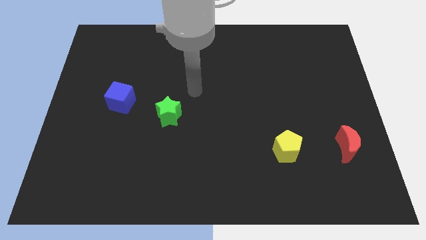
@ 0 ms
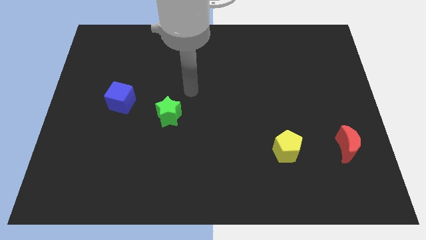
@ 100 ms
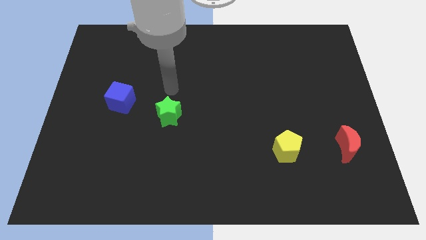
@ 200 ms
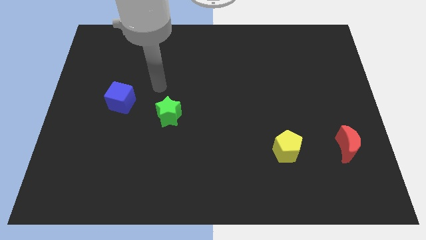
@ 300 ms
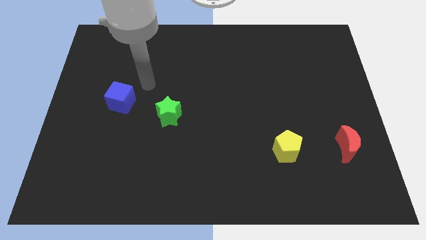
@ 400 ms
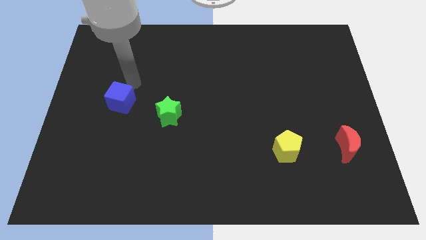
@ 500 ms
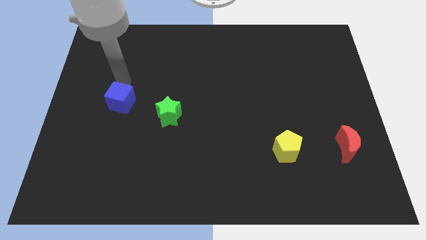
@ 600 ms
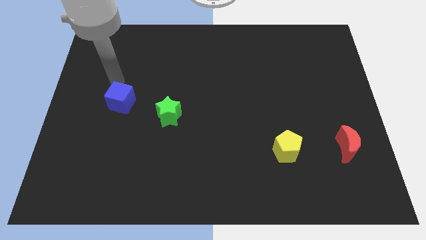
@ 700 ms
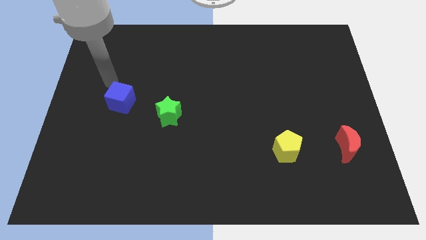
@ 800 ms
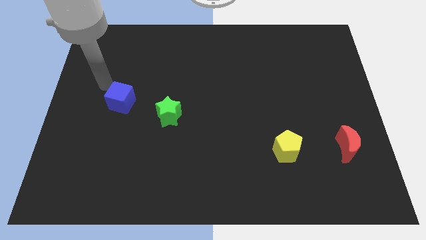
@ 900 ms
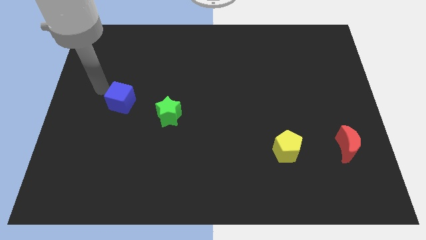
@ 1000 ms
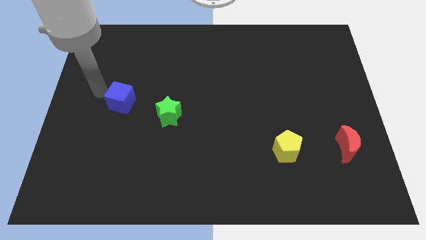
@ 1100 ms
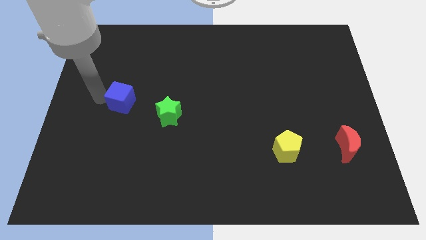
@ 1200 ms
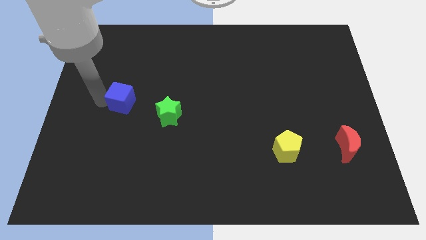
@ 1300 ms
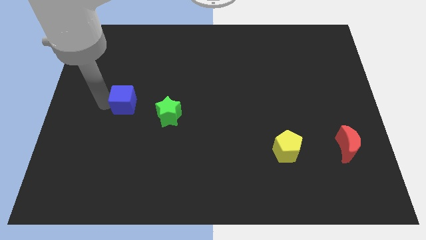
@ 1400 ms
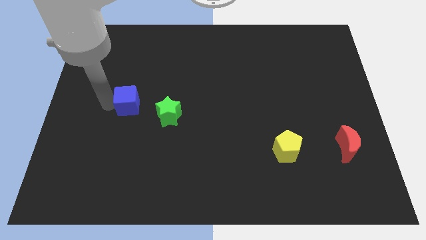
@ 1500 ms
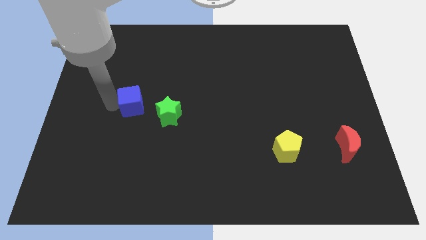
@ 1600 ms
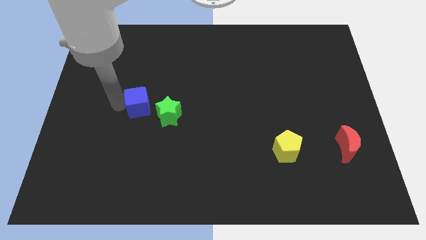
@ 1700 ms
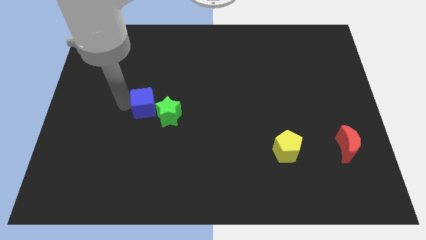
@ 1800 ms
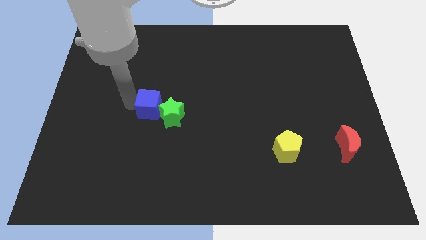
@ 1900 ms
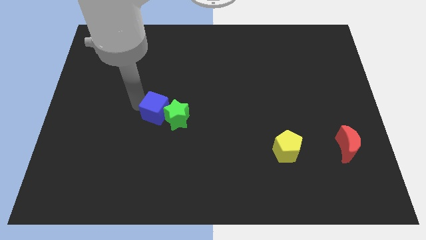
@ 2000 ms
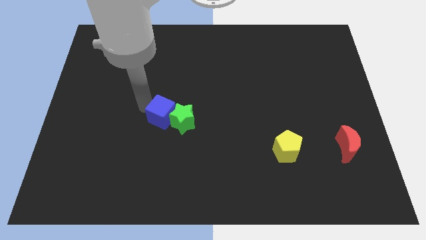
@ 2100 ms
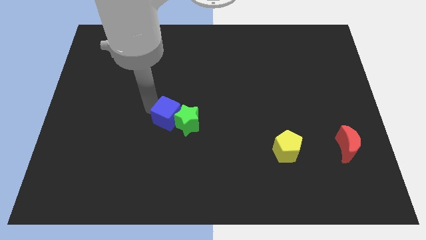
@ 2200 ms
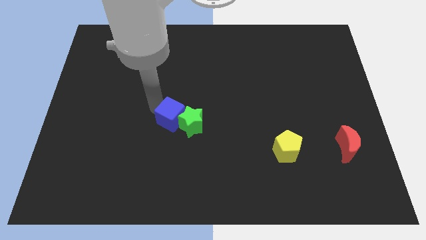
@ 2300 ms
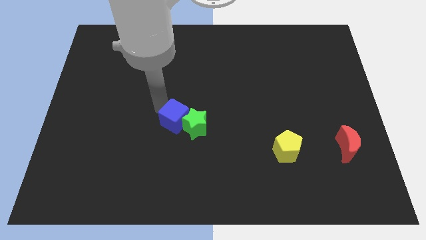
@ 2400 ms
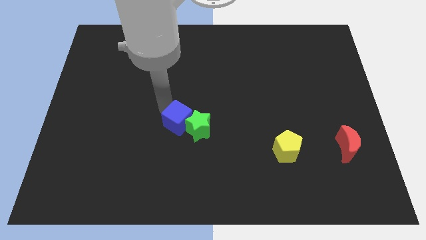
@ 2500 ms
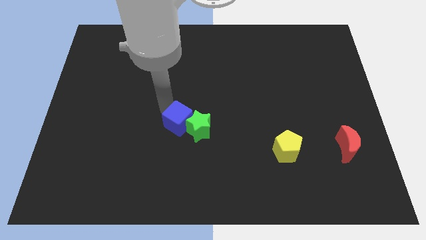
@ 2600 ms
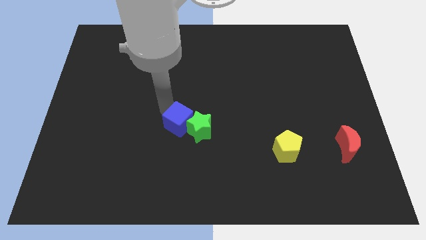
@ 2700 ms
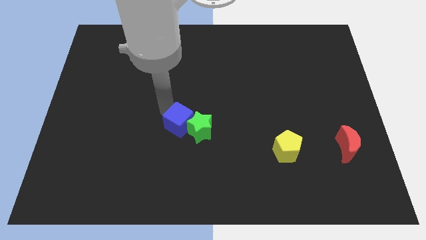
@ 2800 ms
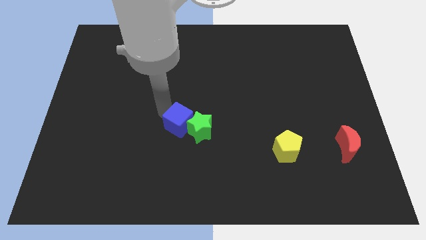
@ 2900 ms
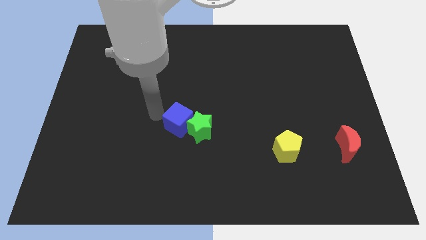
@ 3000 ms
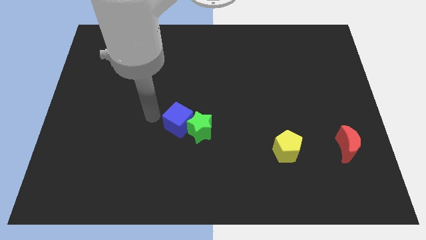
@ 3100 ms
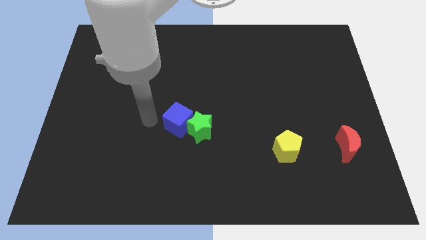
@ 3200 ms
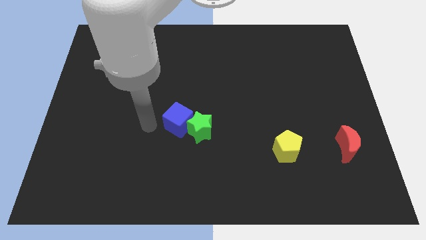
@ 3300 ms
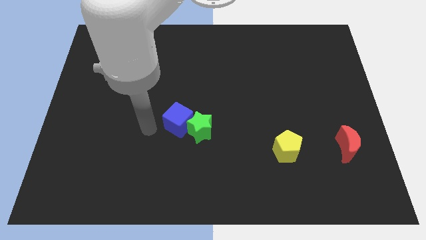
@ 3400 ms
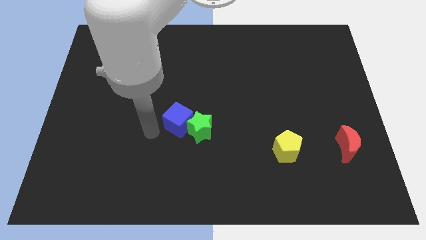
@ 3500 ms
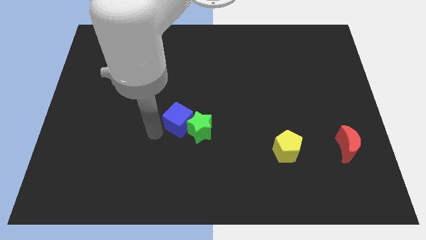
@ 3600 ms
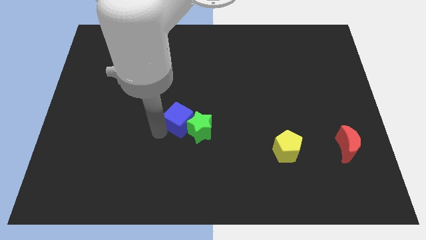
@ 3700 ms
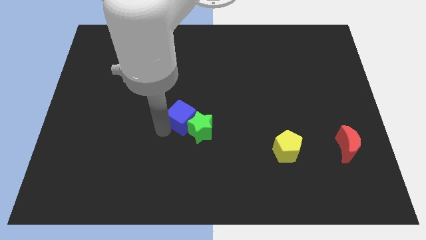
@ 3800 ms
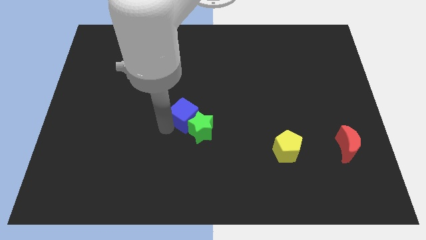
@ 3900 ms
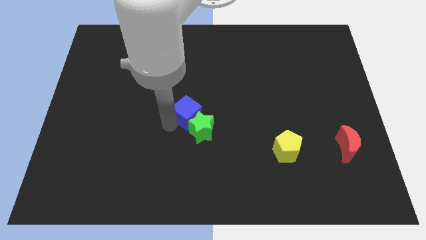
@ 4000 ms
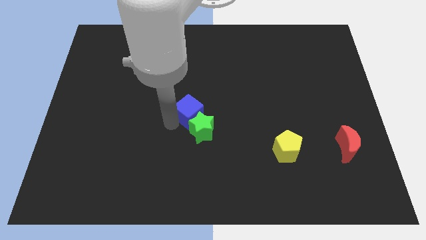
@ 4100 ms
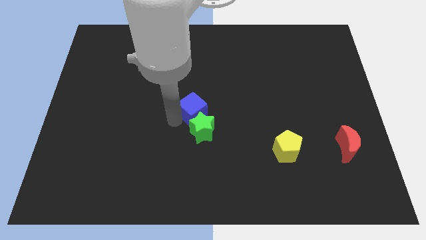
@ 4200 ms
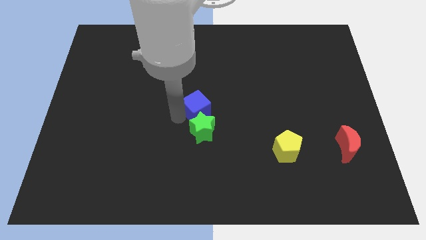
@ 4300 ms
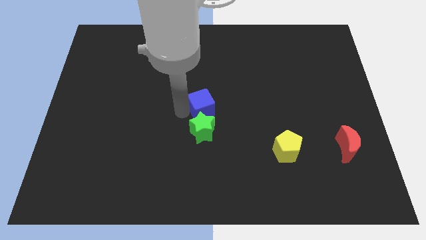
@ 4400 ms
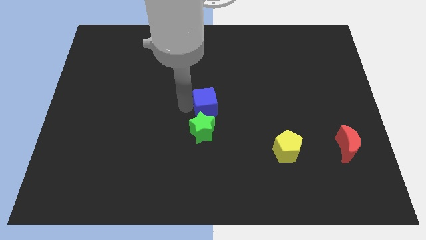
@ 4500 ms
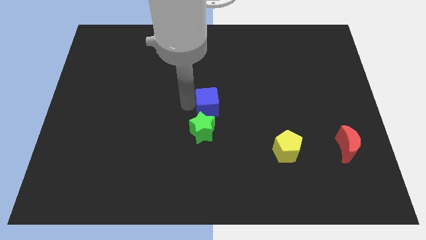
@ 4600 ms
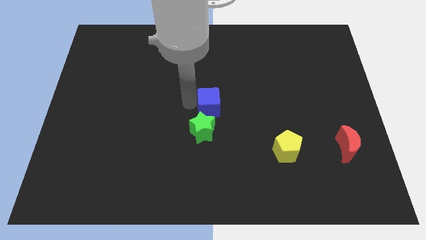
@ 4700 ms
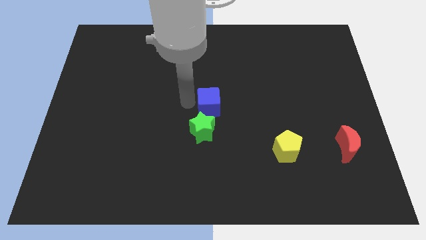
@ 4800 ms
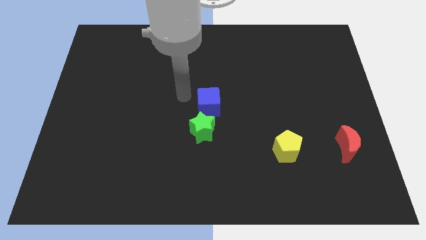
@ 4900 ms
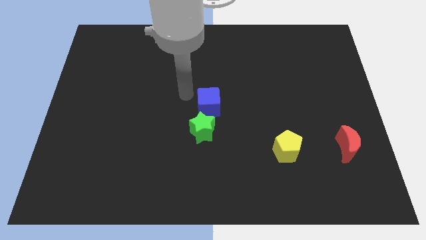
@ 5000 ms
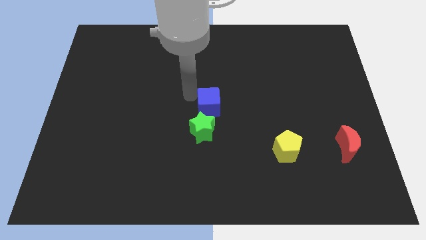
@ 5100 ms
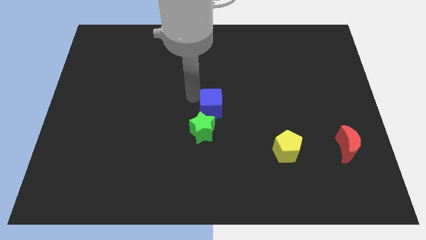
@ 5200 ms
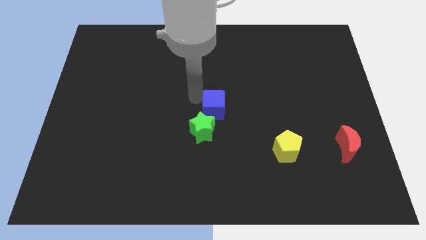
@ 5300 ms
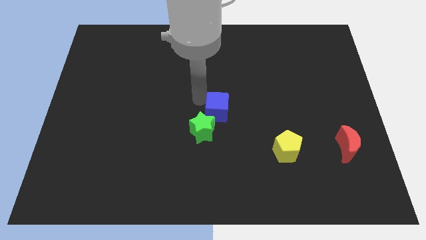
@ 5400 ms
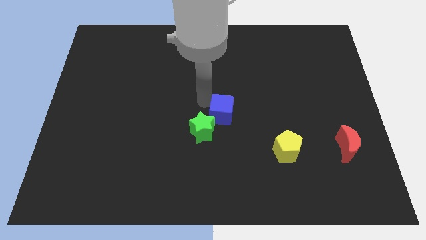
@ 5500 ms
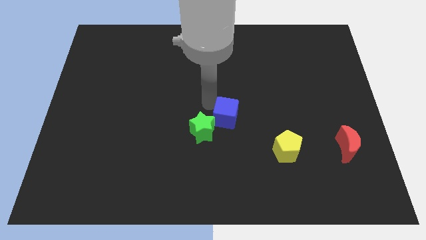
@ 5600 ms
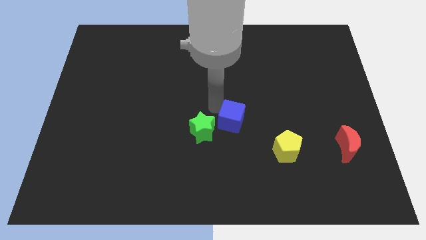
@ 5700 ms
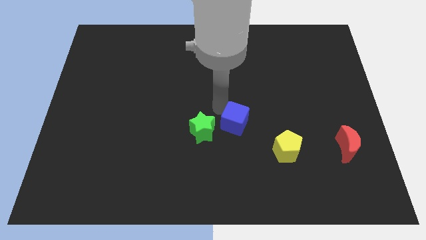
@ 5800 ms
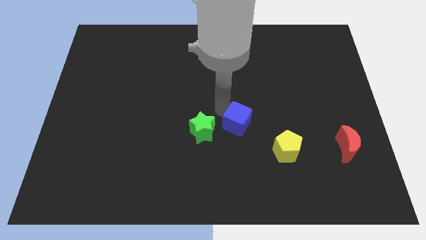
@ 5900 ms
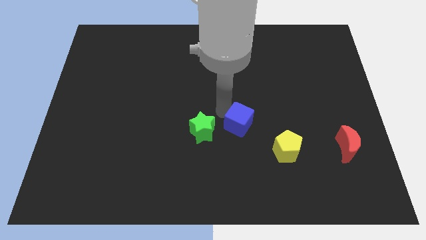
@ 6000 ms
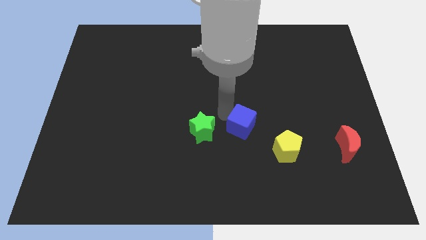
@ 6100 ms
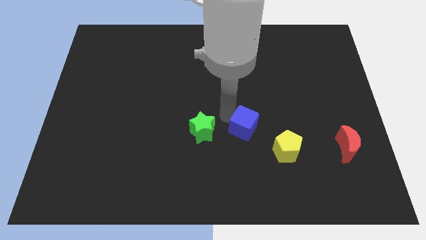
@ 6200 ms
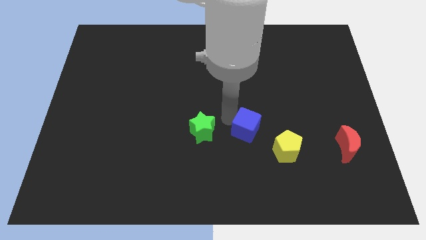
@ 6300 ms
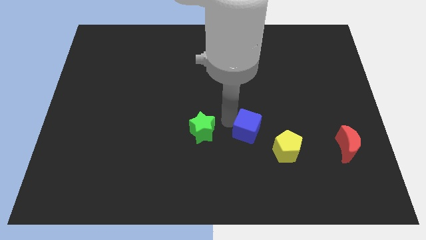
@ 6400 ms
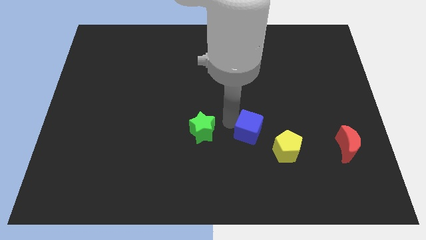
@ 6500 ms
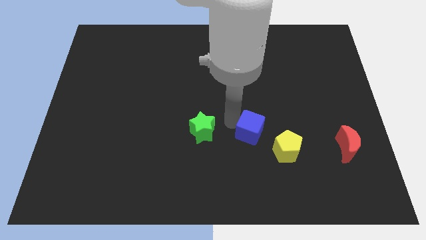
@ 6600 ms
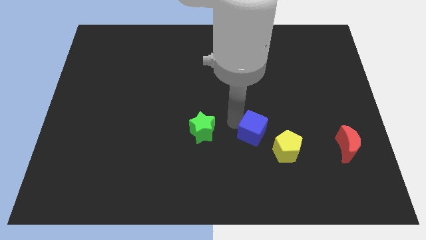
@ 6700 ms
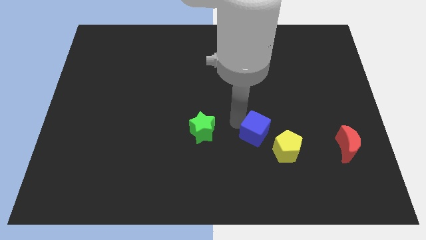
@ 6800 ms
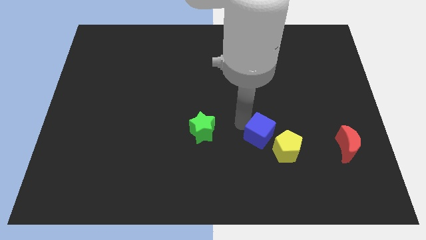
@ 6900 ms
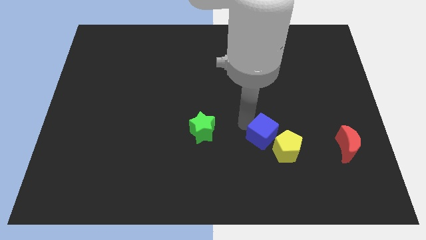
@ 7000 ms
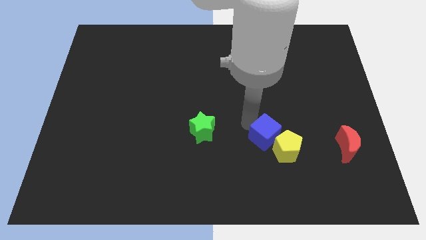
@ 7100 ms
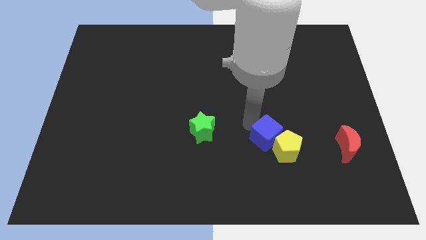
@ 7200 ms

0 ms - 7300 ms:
slide the blue block close to the pentagon

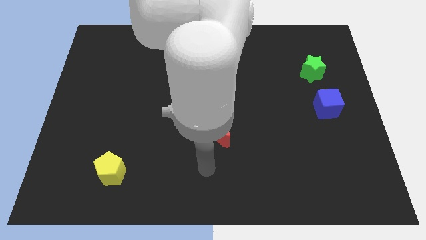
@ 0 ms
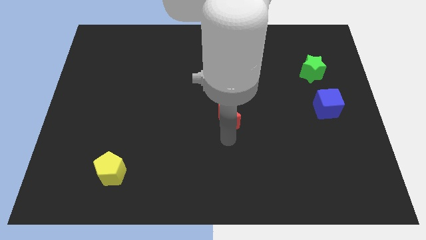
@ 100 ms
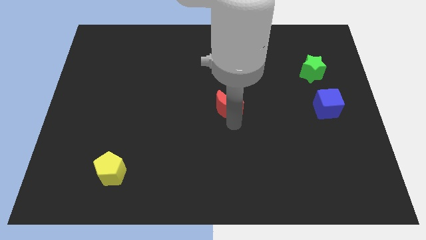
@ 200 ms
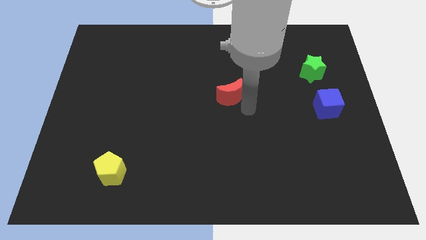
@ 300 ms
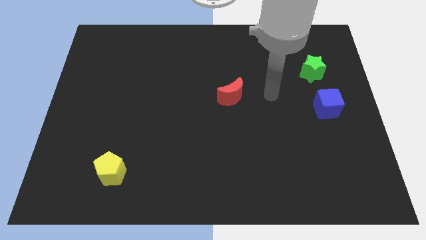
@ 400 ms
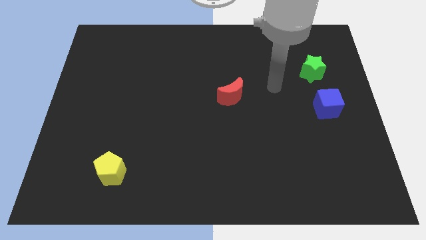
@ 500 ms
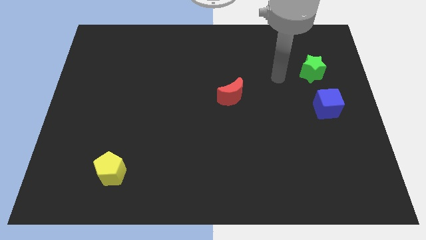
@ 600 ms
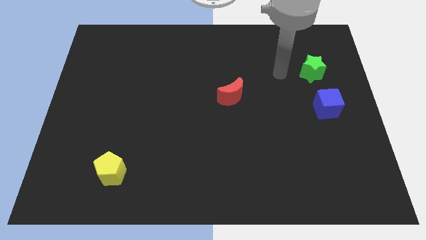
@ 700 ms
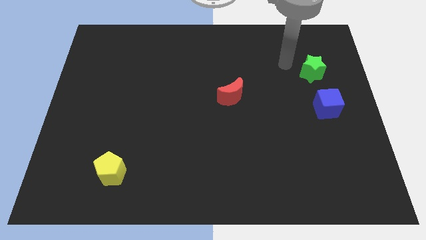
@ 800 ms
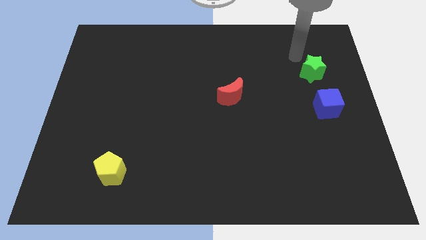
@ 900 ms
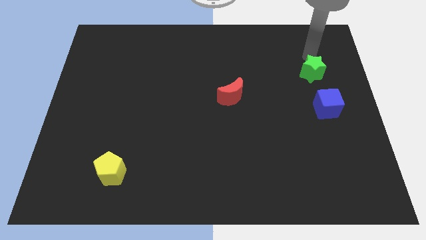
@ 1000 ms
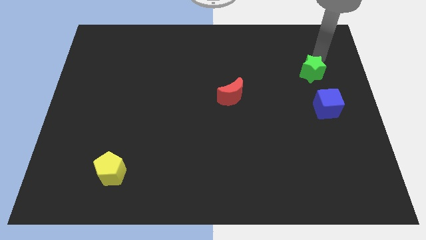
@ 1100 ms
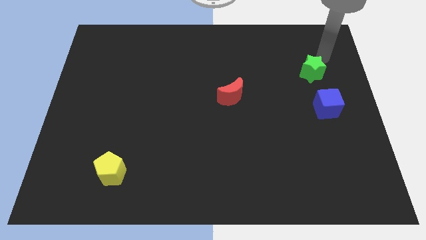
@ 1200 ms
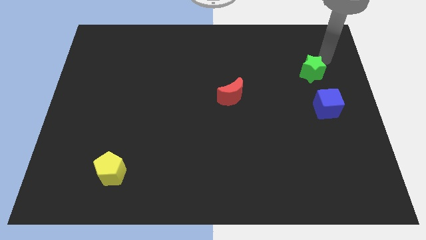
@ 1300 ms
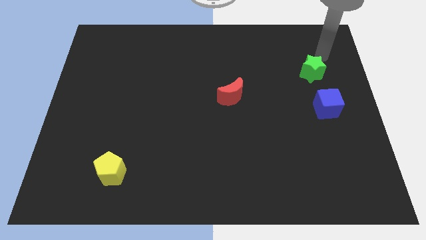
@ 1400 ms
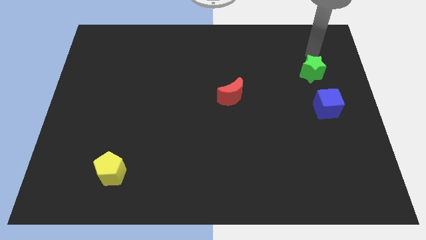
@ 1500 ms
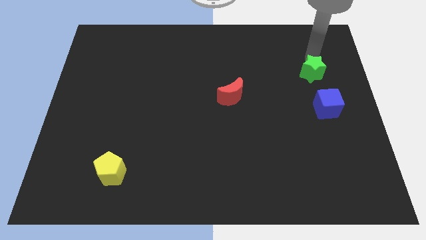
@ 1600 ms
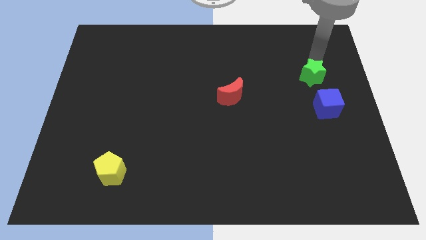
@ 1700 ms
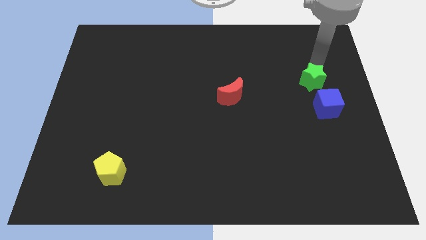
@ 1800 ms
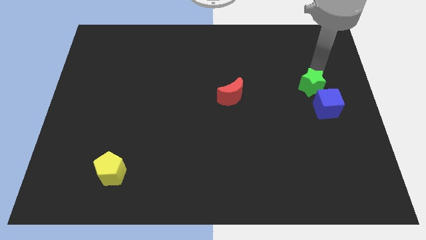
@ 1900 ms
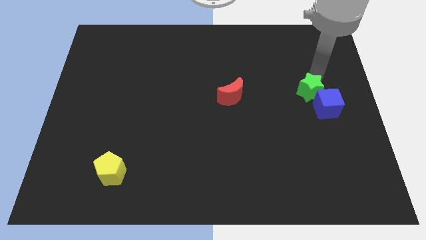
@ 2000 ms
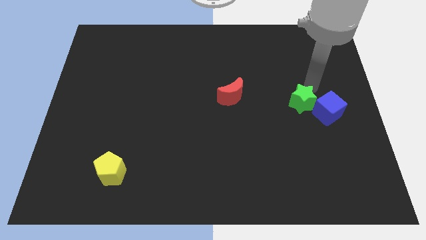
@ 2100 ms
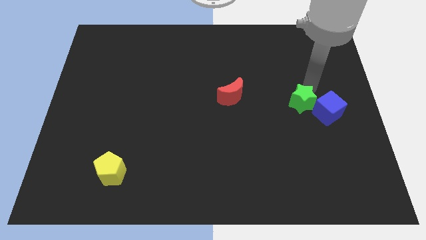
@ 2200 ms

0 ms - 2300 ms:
push the green star next to the blue cube
